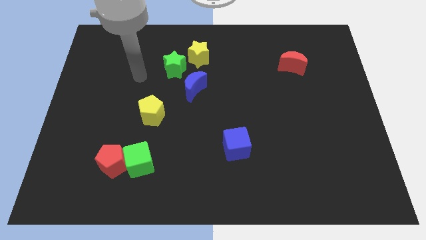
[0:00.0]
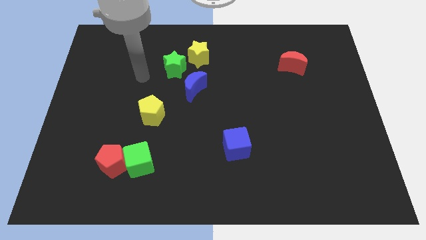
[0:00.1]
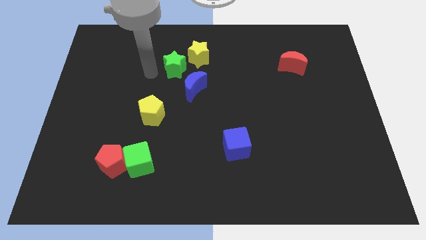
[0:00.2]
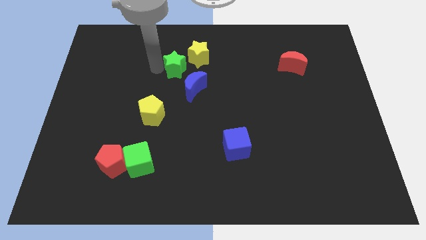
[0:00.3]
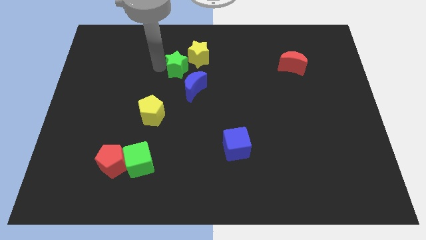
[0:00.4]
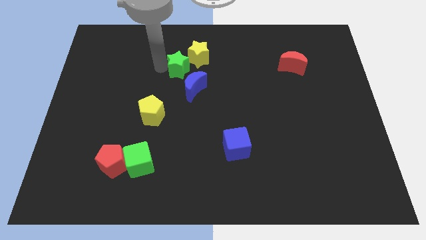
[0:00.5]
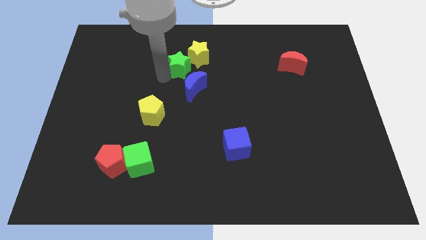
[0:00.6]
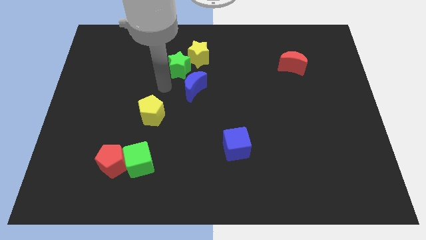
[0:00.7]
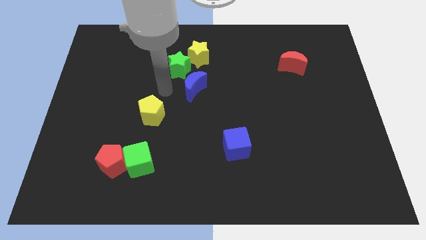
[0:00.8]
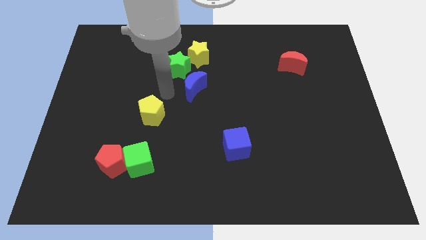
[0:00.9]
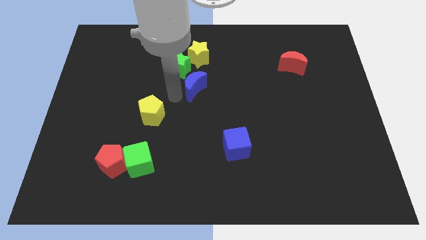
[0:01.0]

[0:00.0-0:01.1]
push the green star slightly close to the yellow star

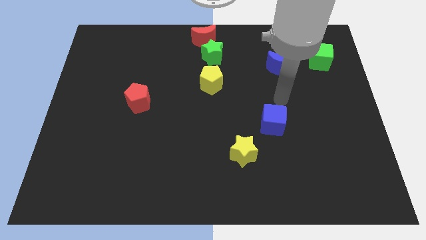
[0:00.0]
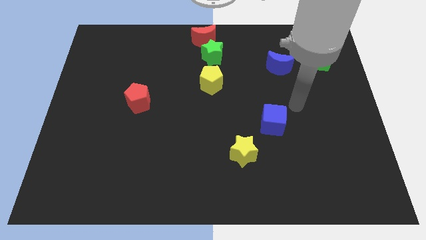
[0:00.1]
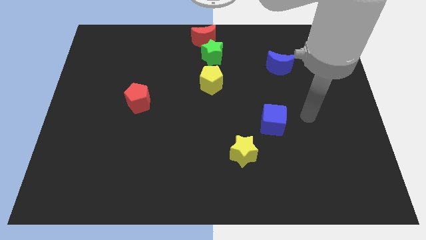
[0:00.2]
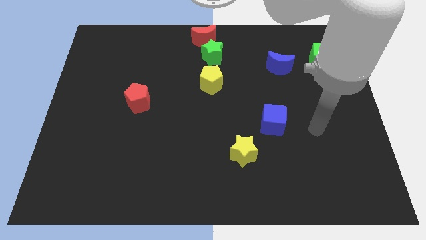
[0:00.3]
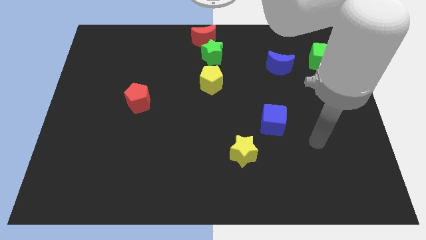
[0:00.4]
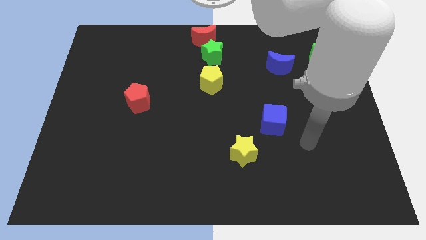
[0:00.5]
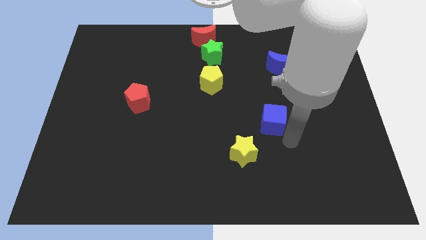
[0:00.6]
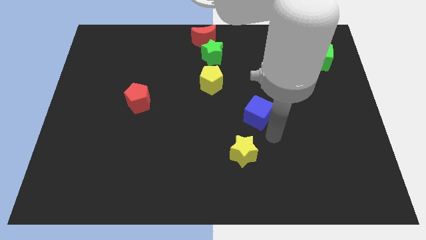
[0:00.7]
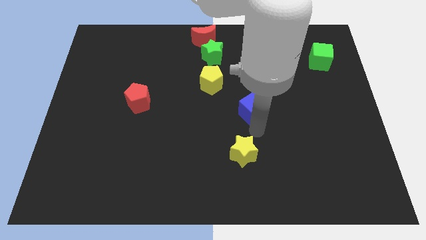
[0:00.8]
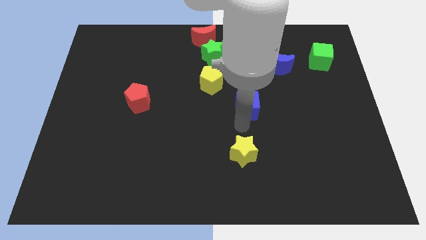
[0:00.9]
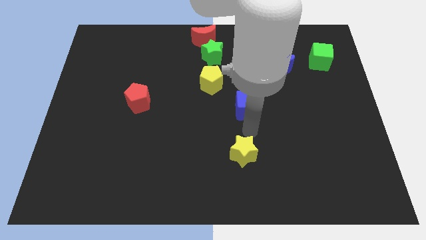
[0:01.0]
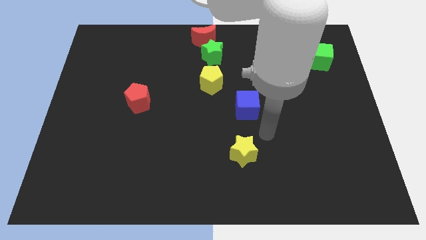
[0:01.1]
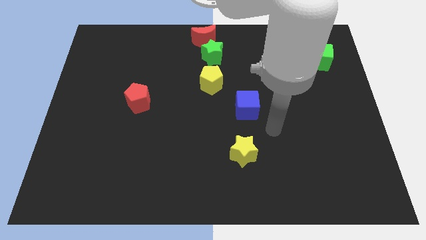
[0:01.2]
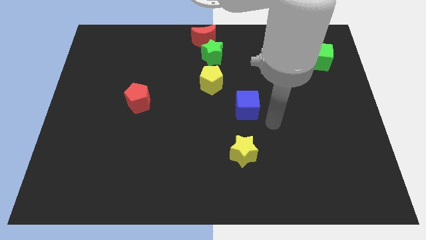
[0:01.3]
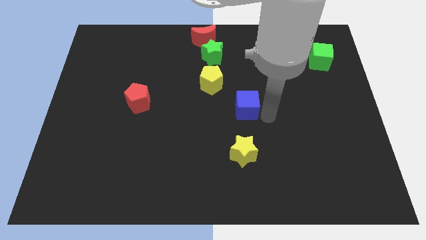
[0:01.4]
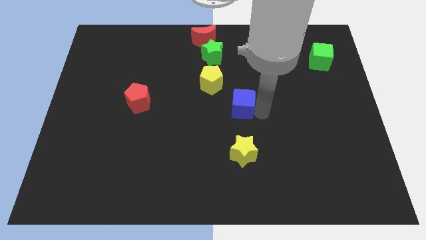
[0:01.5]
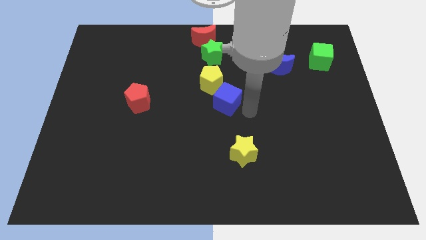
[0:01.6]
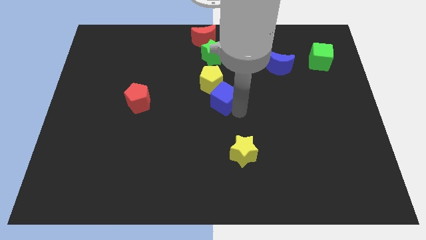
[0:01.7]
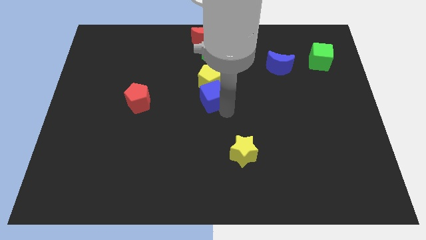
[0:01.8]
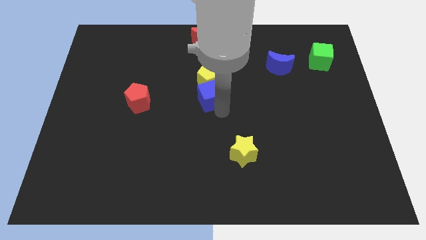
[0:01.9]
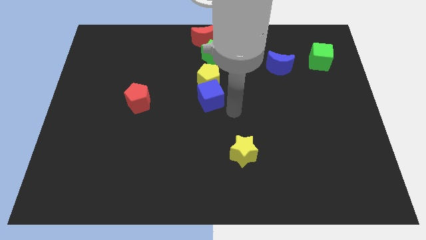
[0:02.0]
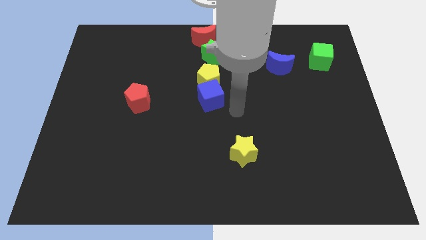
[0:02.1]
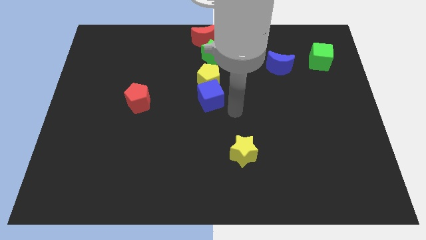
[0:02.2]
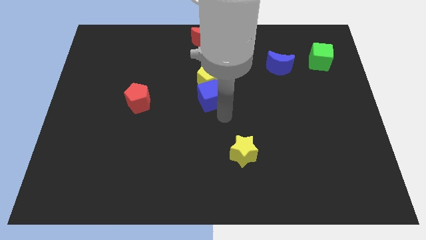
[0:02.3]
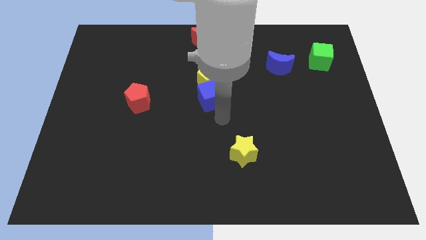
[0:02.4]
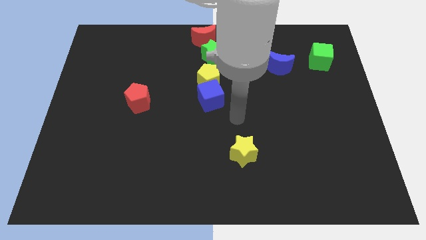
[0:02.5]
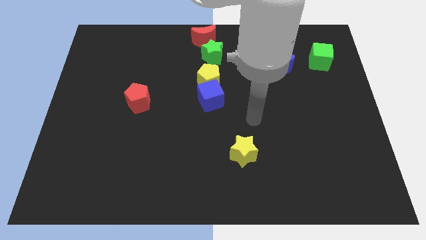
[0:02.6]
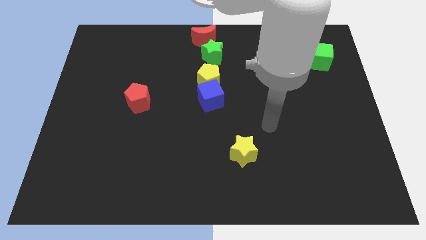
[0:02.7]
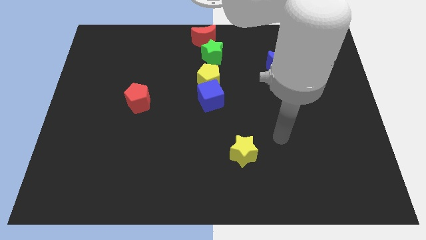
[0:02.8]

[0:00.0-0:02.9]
place blue cube to the bottom of yellow pentagon

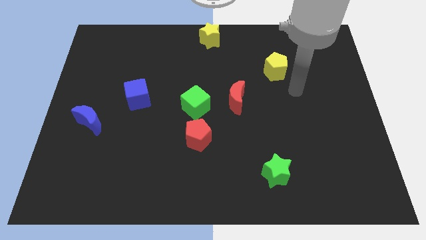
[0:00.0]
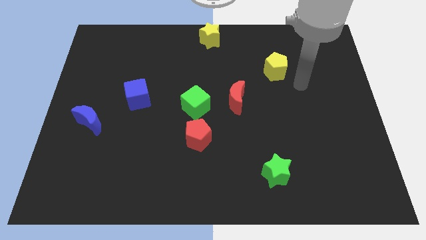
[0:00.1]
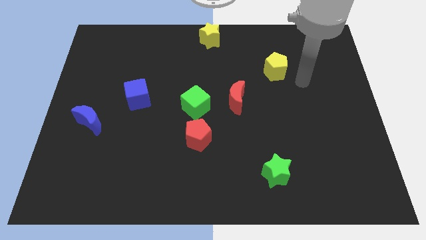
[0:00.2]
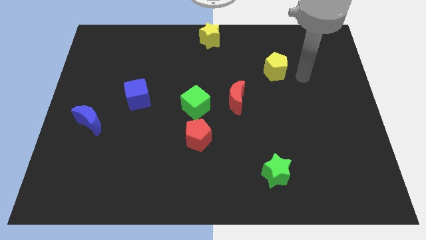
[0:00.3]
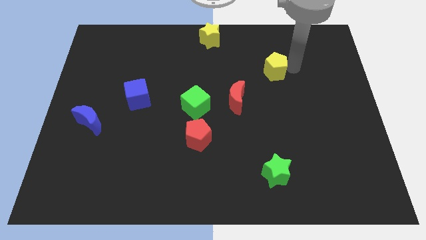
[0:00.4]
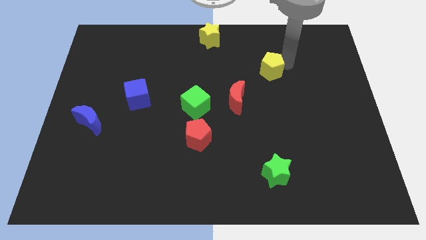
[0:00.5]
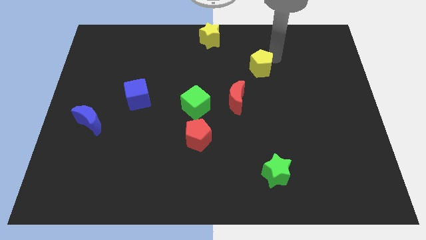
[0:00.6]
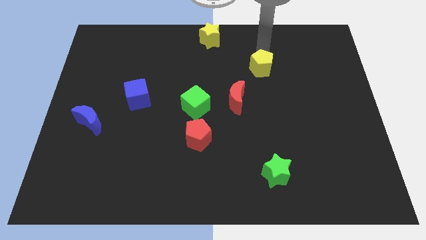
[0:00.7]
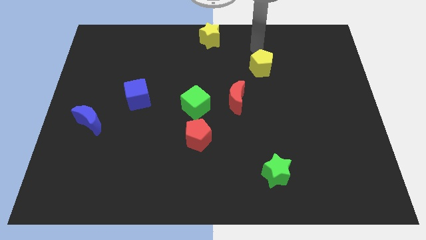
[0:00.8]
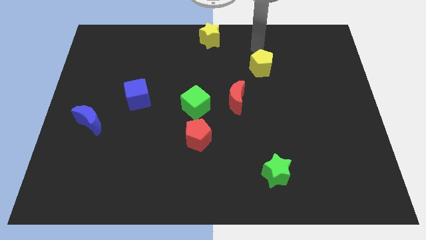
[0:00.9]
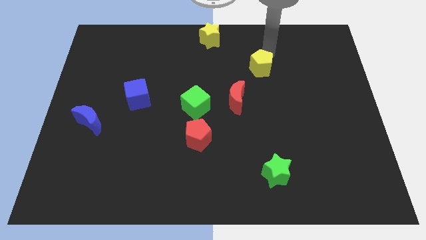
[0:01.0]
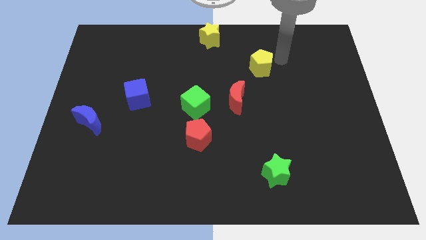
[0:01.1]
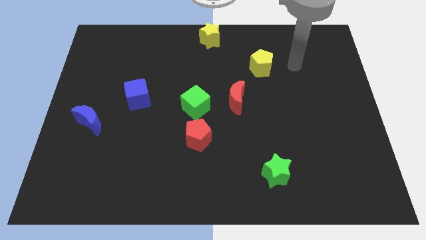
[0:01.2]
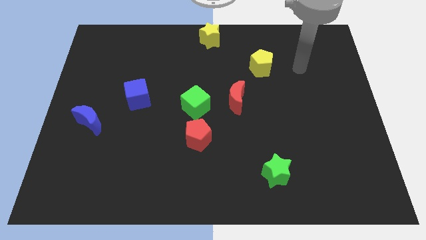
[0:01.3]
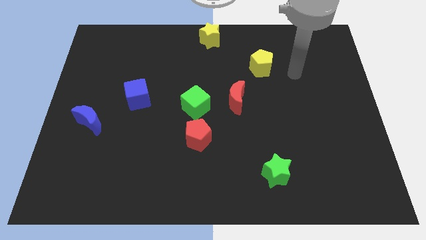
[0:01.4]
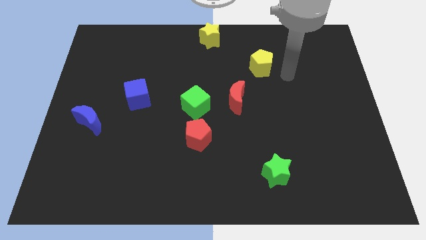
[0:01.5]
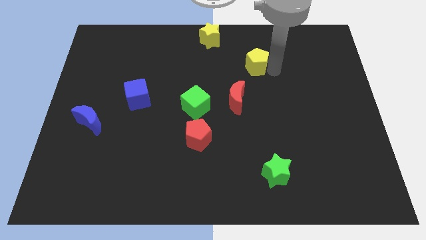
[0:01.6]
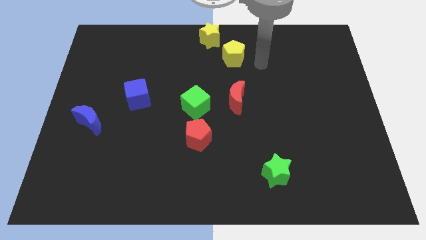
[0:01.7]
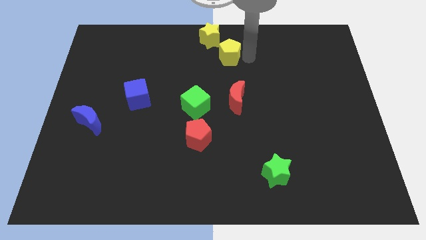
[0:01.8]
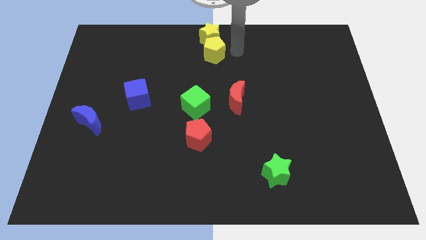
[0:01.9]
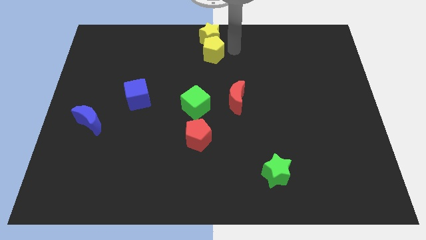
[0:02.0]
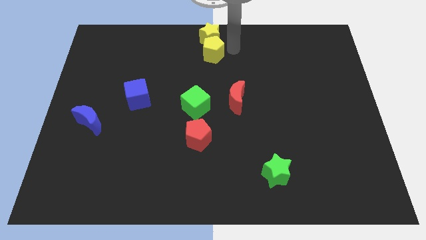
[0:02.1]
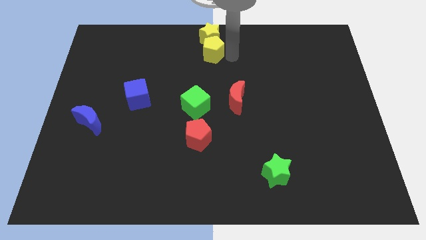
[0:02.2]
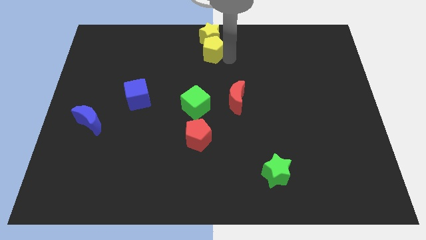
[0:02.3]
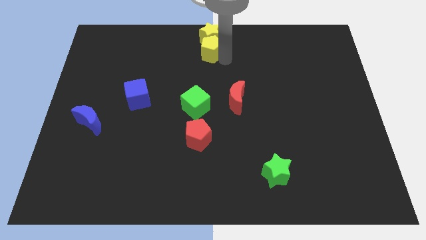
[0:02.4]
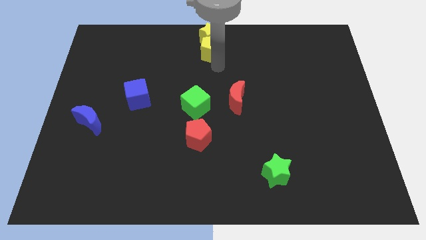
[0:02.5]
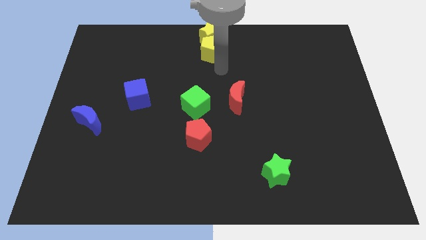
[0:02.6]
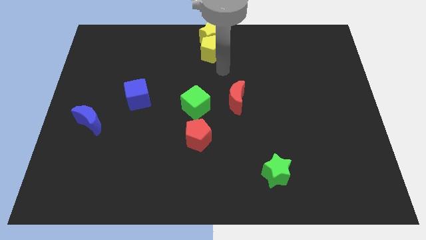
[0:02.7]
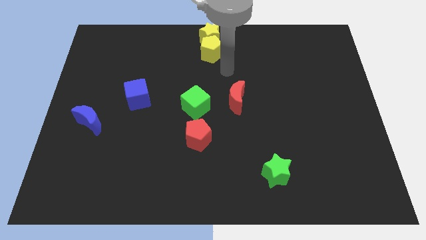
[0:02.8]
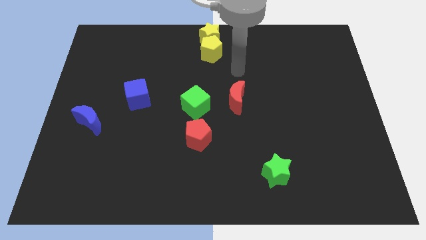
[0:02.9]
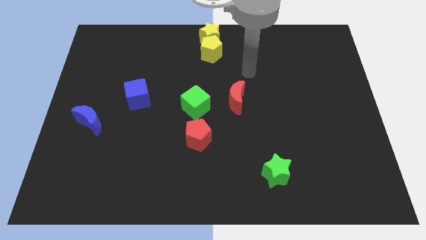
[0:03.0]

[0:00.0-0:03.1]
move the yellow pentagon at the bottom of the yellow star

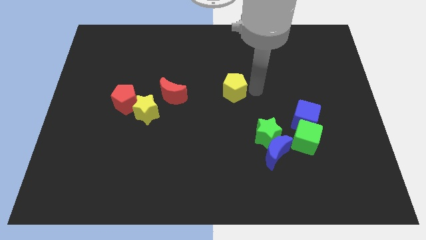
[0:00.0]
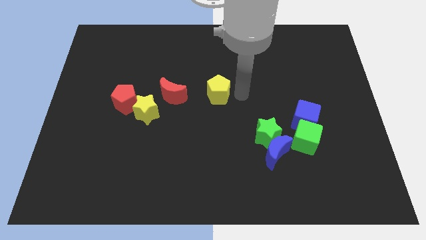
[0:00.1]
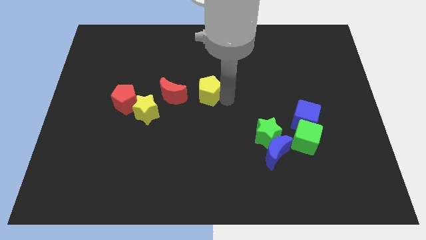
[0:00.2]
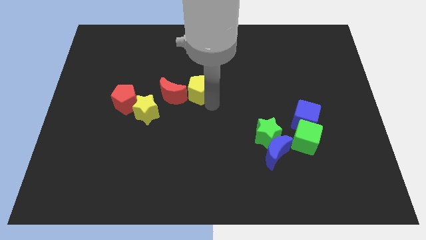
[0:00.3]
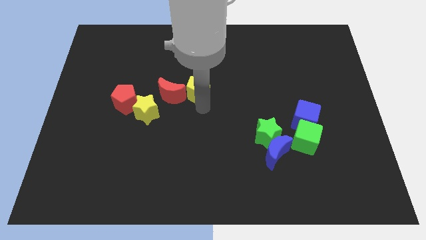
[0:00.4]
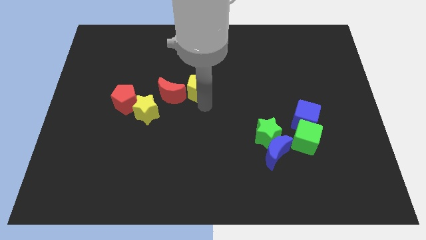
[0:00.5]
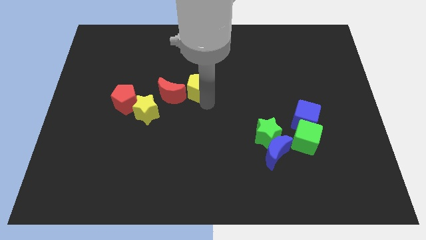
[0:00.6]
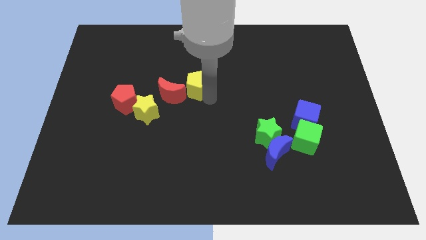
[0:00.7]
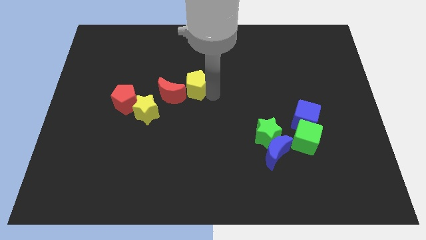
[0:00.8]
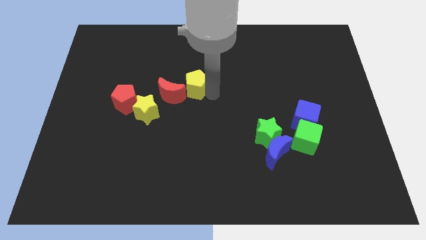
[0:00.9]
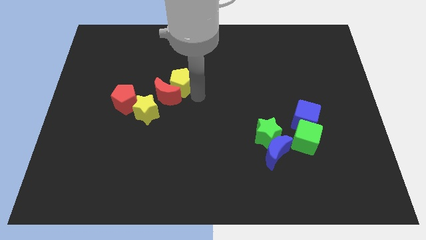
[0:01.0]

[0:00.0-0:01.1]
place the yellow pentagon on the top of red crescent

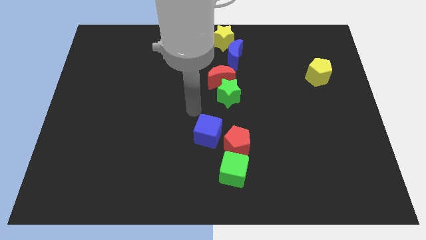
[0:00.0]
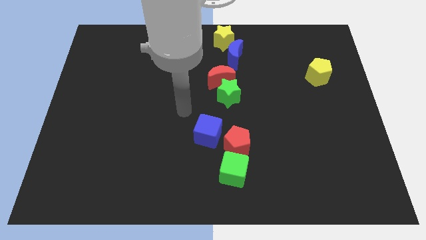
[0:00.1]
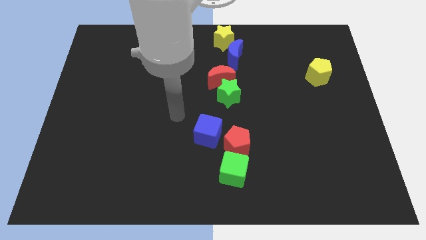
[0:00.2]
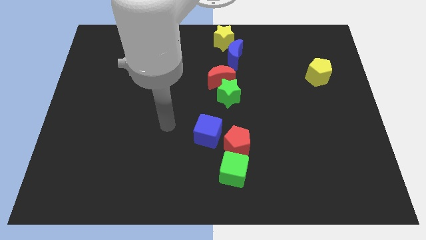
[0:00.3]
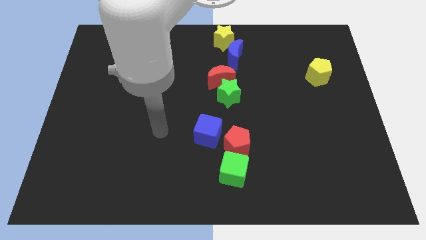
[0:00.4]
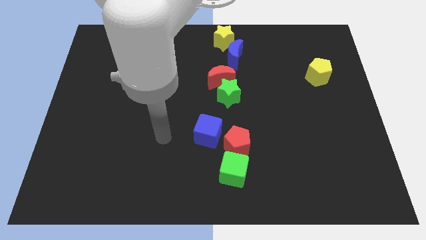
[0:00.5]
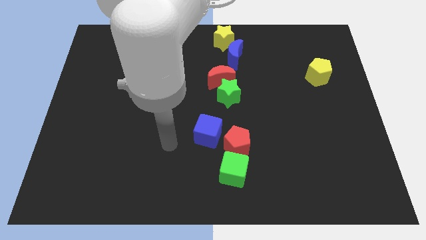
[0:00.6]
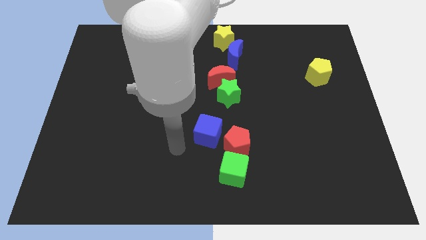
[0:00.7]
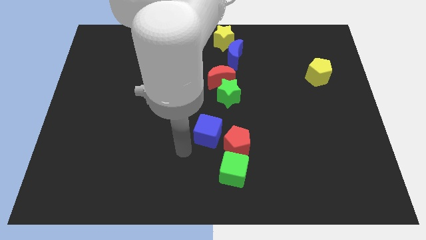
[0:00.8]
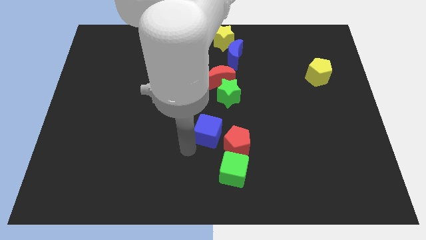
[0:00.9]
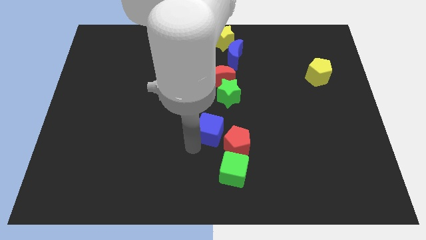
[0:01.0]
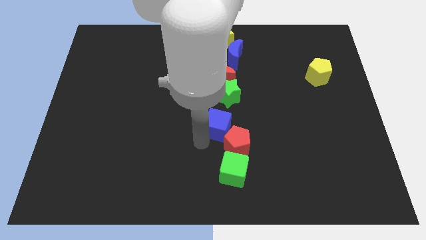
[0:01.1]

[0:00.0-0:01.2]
place your arm below the blue cube
